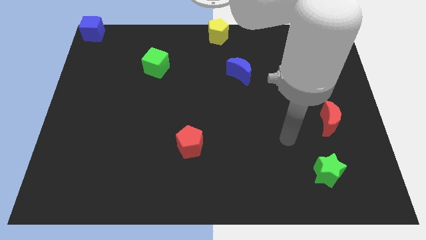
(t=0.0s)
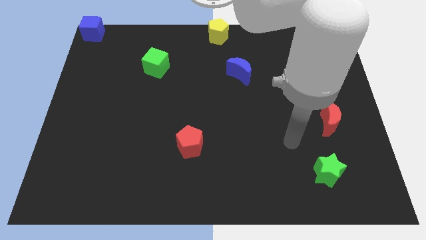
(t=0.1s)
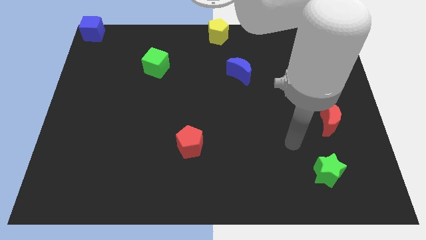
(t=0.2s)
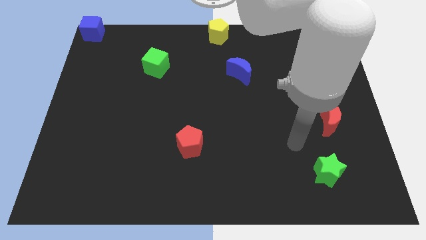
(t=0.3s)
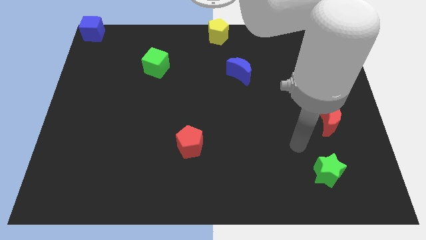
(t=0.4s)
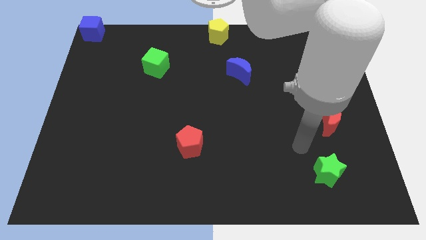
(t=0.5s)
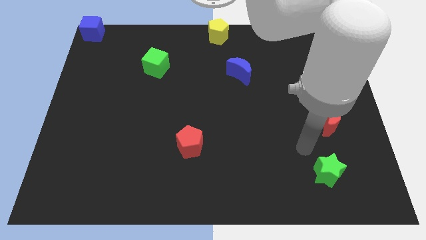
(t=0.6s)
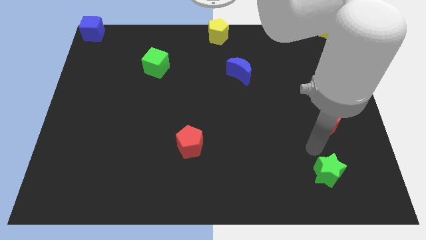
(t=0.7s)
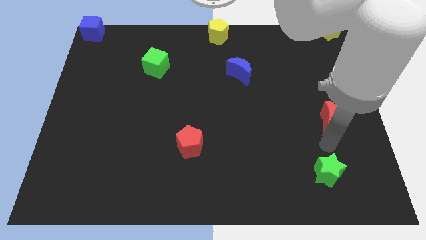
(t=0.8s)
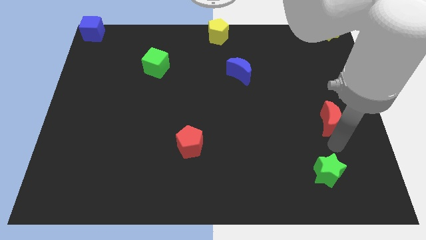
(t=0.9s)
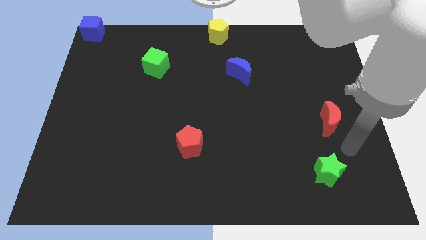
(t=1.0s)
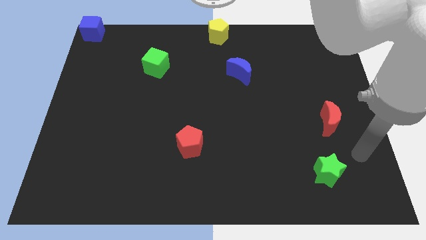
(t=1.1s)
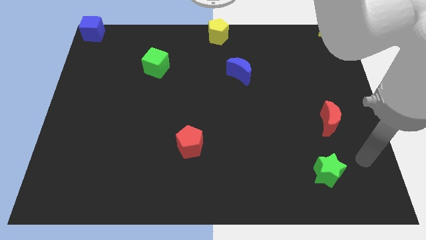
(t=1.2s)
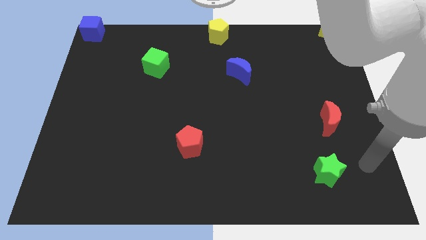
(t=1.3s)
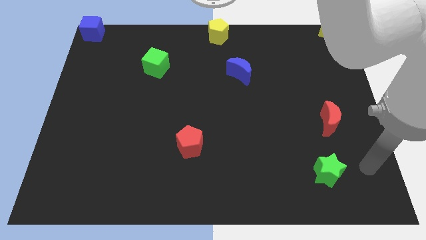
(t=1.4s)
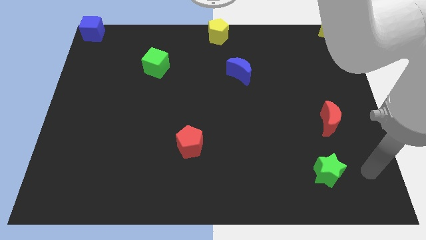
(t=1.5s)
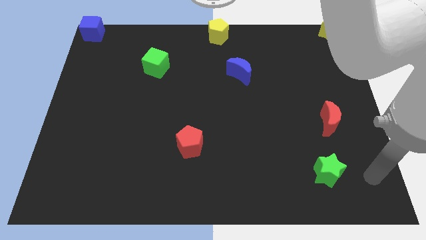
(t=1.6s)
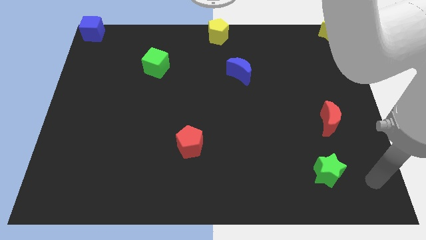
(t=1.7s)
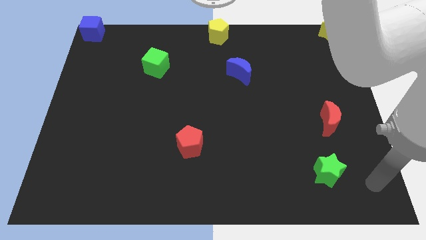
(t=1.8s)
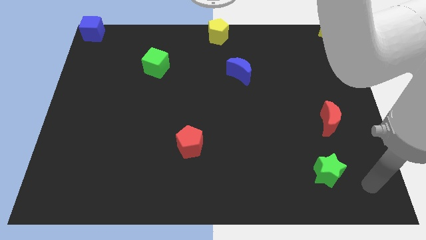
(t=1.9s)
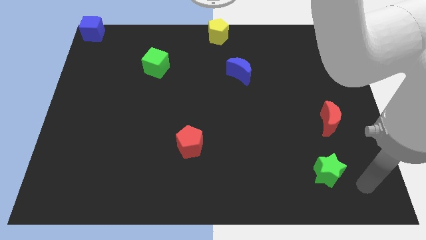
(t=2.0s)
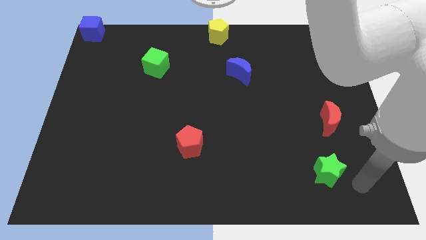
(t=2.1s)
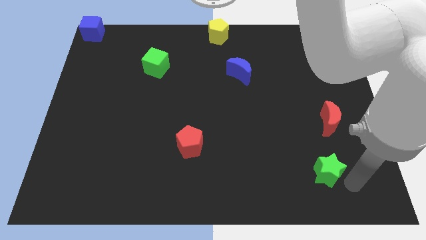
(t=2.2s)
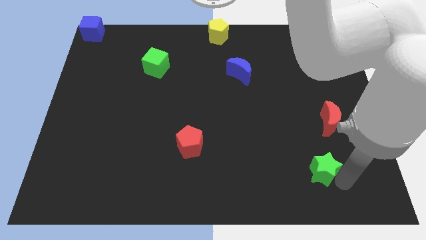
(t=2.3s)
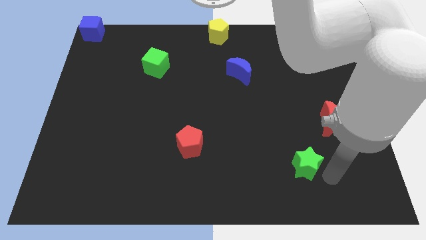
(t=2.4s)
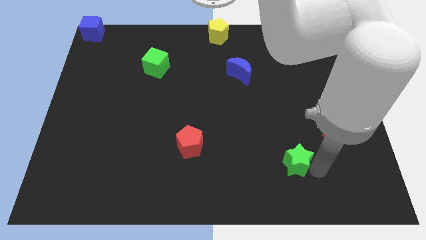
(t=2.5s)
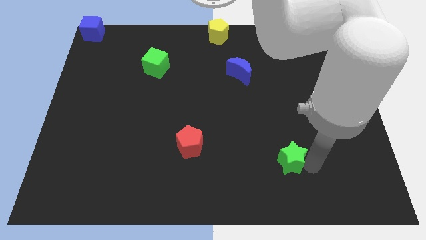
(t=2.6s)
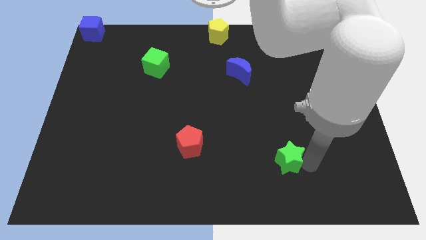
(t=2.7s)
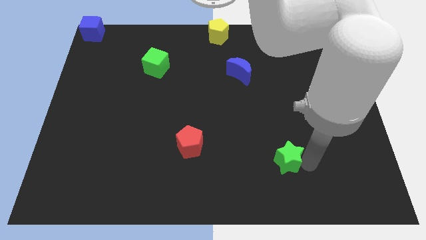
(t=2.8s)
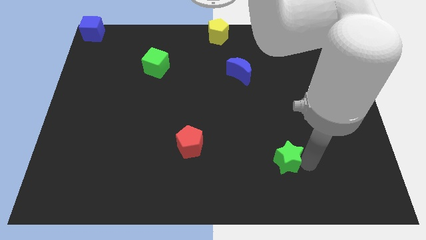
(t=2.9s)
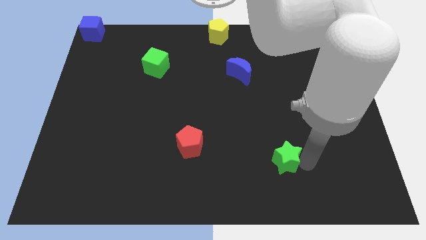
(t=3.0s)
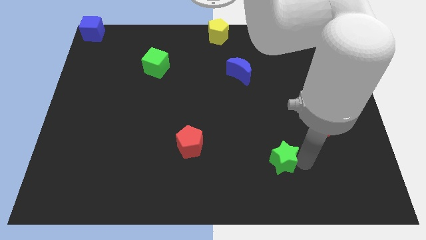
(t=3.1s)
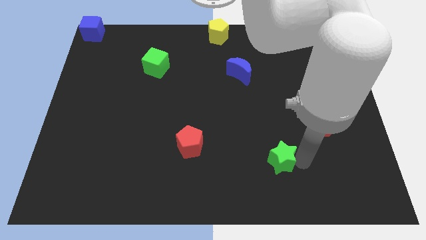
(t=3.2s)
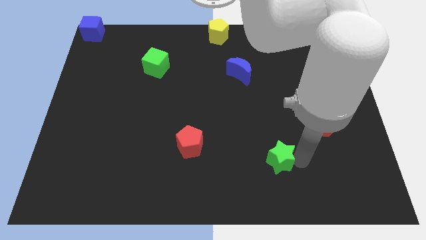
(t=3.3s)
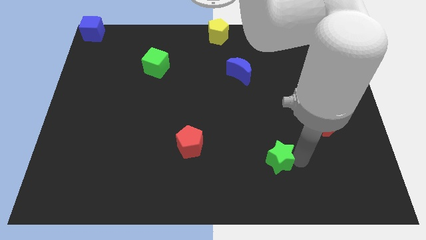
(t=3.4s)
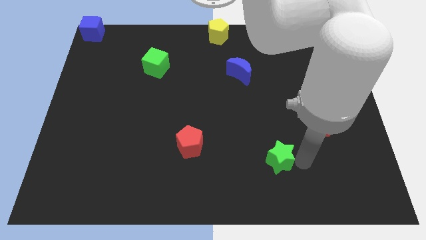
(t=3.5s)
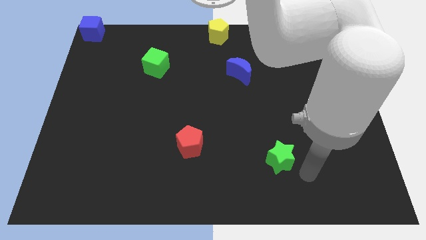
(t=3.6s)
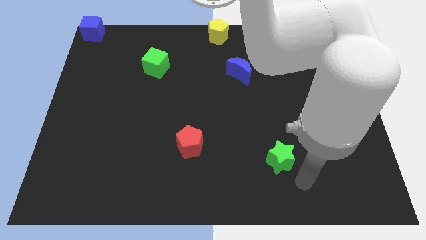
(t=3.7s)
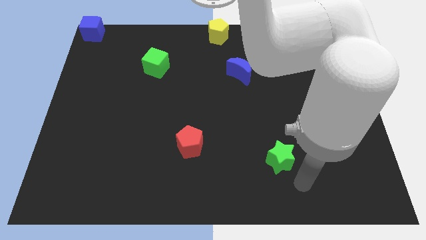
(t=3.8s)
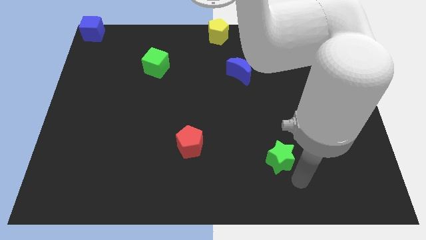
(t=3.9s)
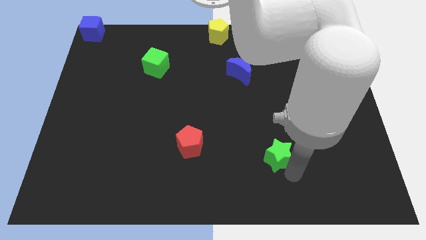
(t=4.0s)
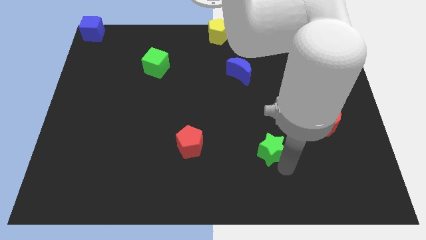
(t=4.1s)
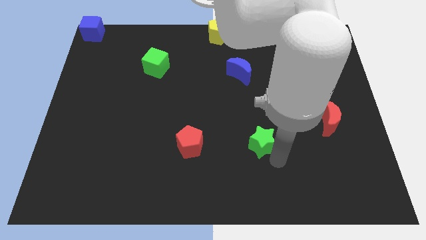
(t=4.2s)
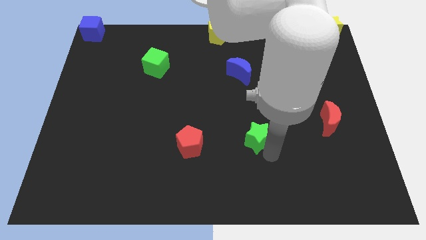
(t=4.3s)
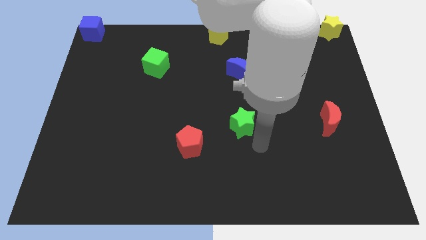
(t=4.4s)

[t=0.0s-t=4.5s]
place the green star in between the red moon and red pentagon

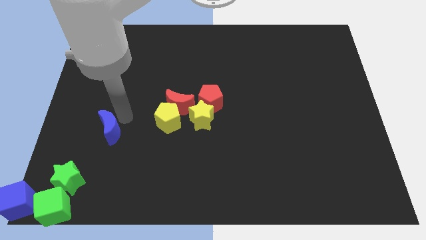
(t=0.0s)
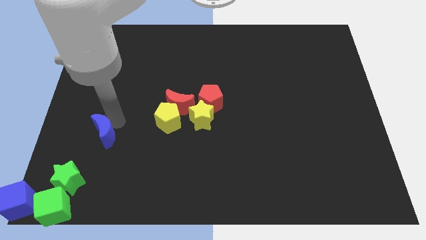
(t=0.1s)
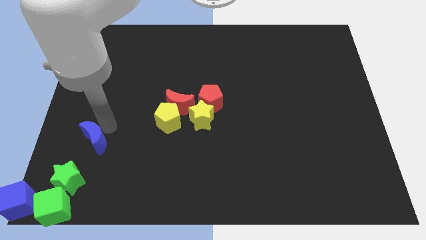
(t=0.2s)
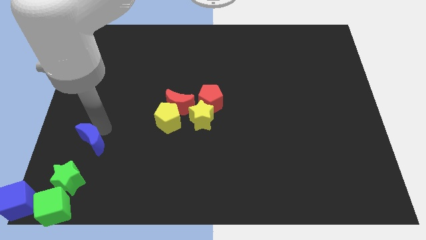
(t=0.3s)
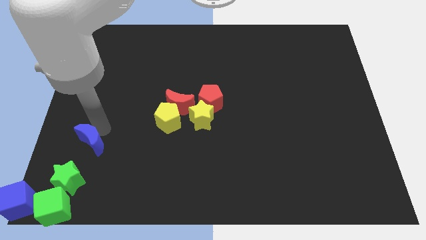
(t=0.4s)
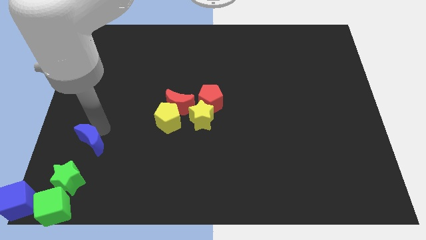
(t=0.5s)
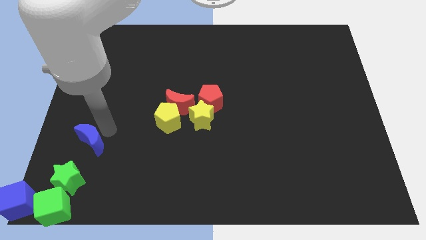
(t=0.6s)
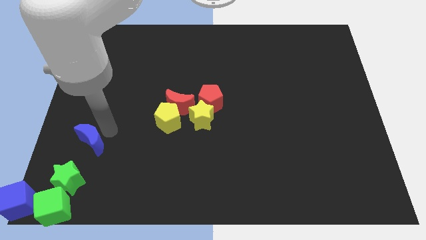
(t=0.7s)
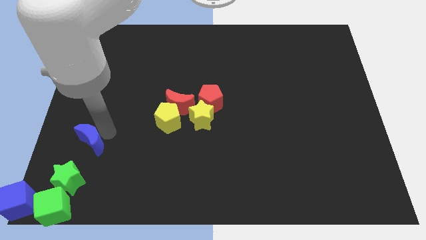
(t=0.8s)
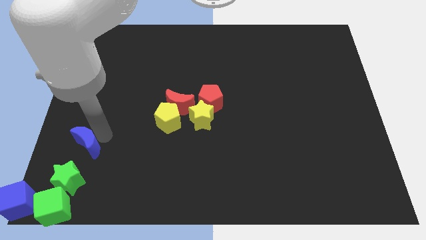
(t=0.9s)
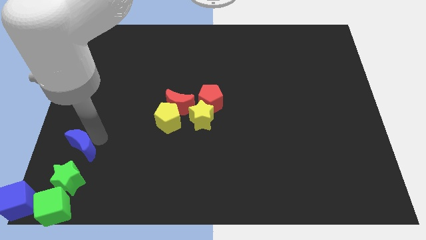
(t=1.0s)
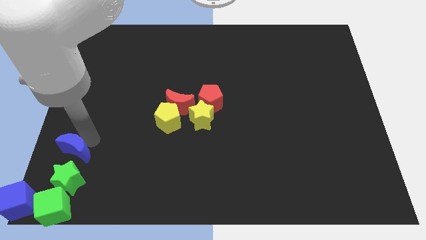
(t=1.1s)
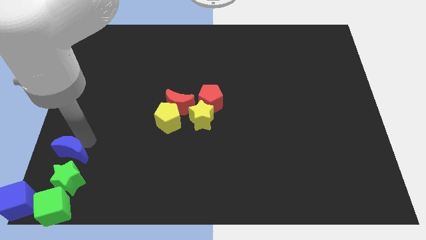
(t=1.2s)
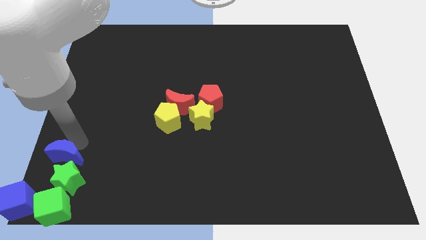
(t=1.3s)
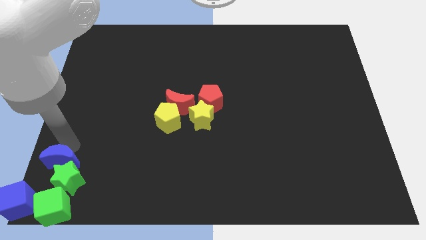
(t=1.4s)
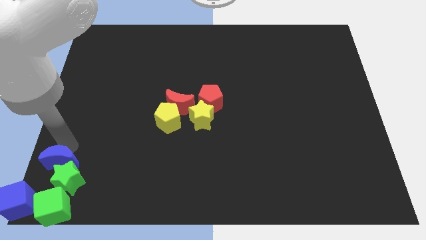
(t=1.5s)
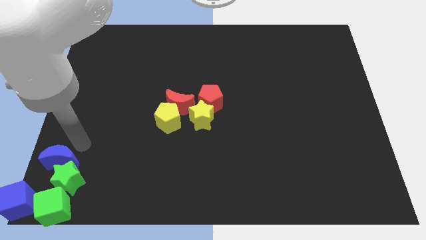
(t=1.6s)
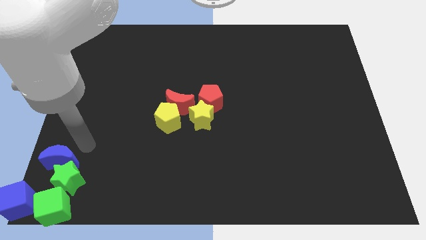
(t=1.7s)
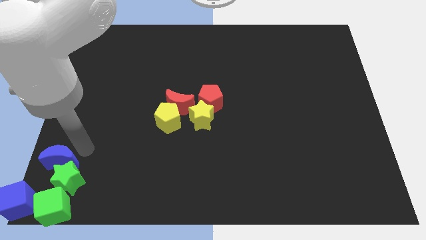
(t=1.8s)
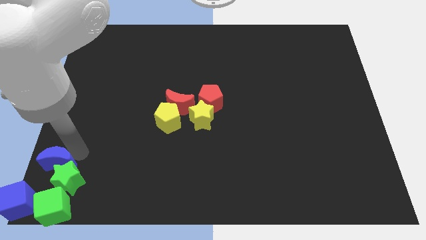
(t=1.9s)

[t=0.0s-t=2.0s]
push the blue crescent towards the green star

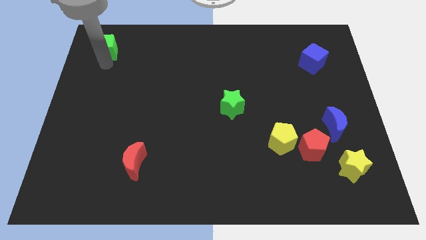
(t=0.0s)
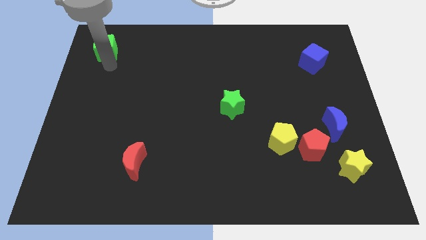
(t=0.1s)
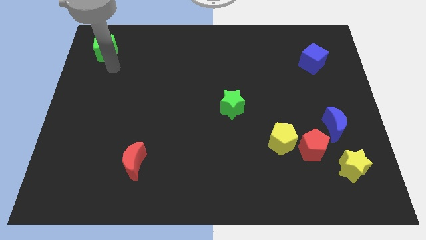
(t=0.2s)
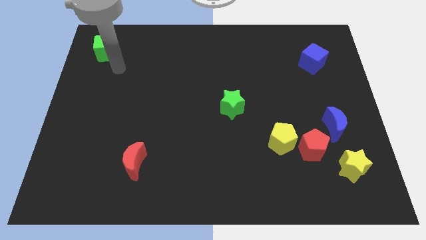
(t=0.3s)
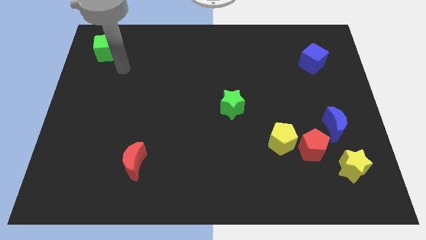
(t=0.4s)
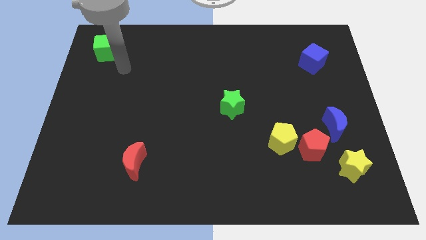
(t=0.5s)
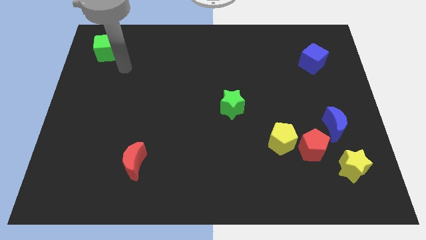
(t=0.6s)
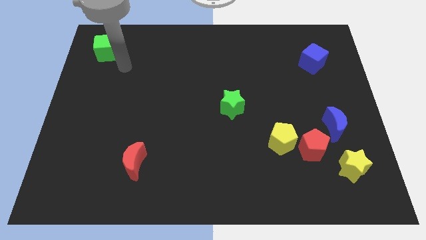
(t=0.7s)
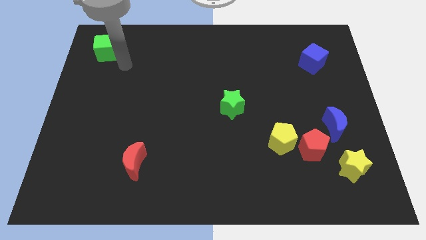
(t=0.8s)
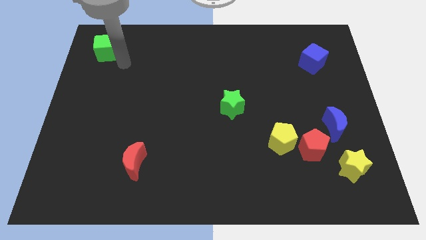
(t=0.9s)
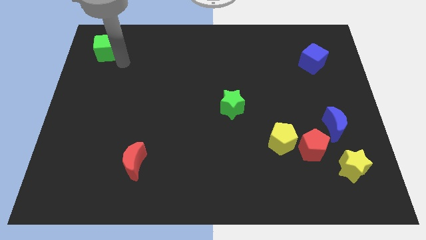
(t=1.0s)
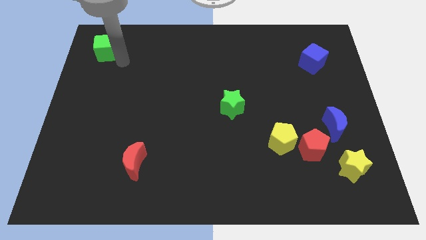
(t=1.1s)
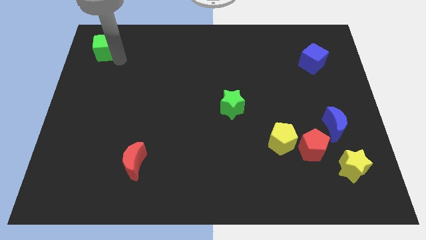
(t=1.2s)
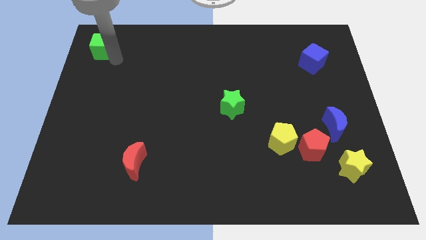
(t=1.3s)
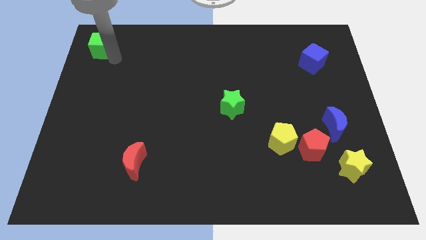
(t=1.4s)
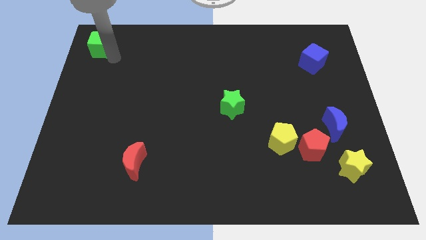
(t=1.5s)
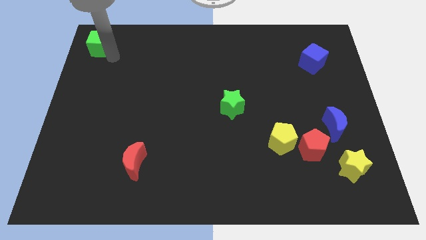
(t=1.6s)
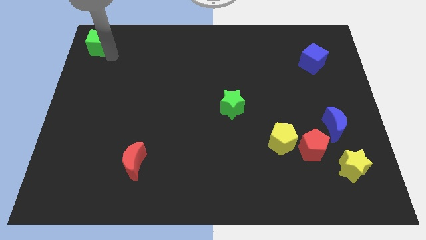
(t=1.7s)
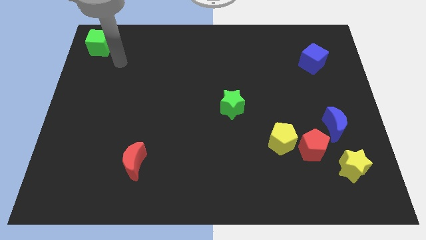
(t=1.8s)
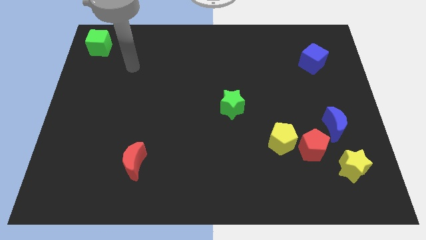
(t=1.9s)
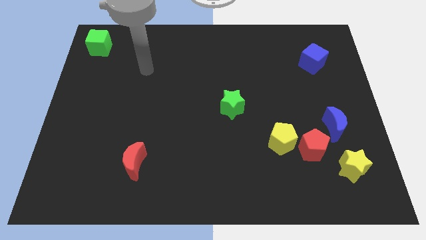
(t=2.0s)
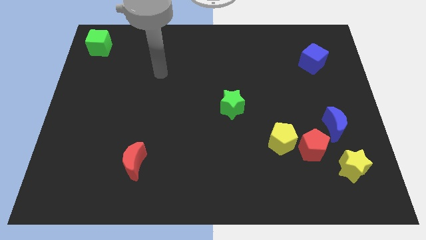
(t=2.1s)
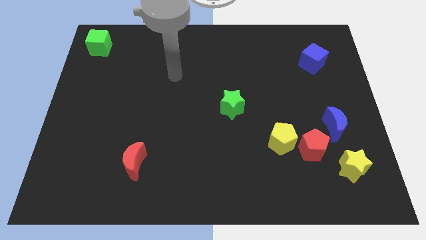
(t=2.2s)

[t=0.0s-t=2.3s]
place the green cube at the top left side of the board

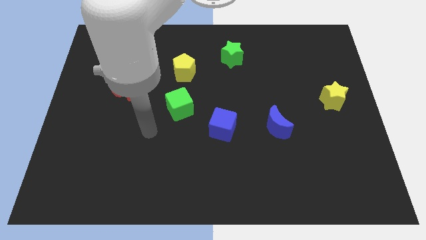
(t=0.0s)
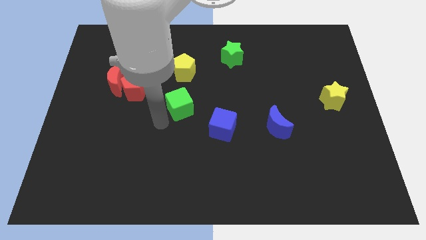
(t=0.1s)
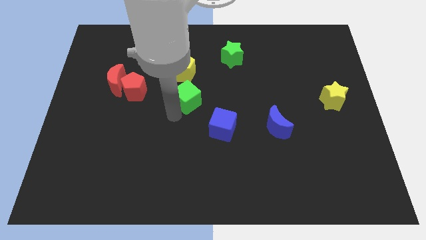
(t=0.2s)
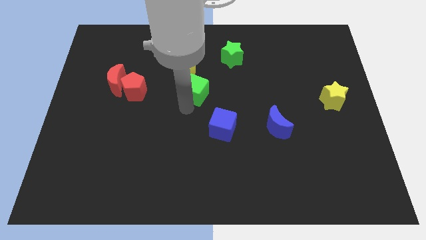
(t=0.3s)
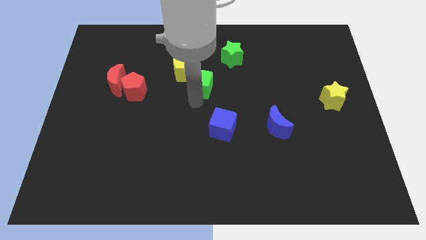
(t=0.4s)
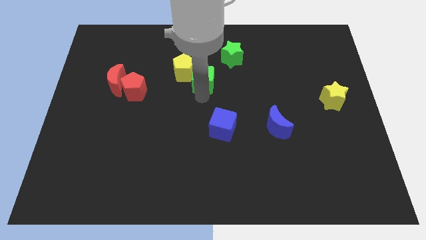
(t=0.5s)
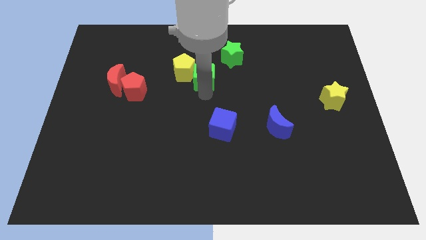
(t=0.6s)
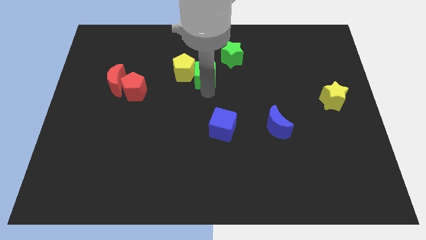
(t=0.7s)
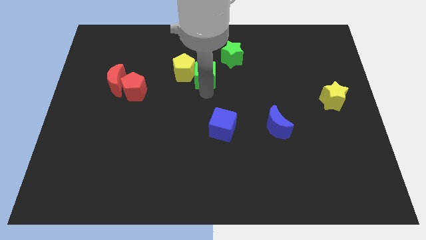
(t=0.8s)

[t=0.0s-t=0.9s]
place green cube beside yellow pentagon
